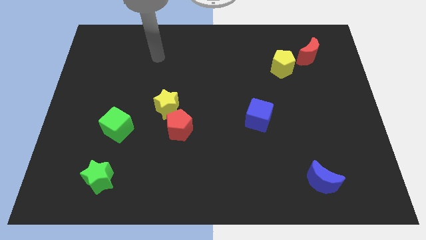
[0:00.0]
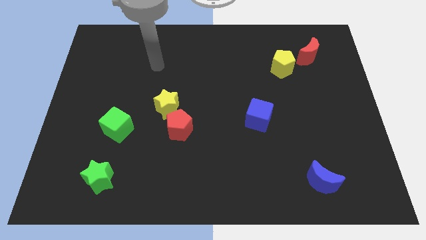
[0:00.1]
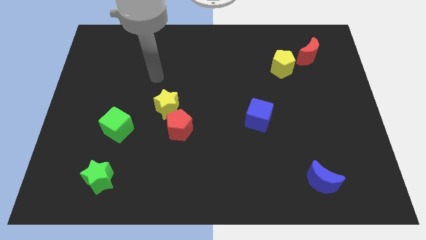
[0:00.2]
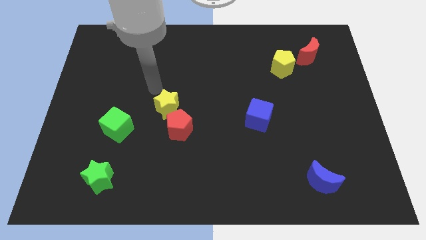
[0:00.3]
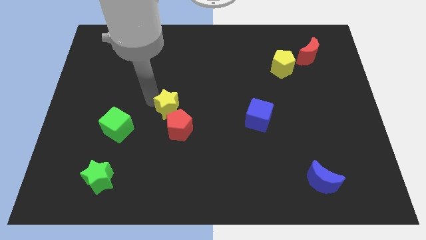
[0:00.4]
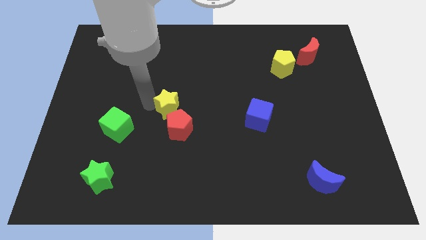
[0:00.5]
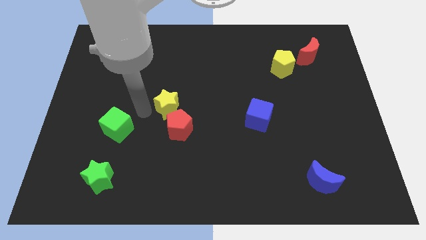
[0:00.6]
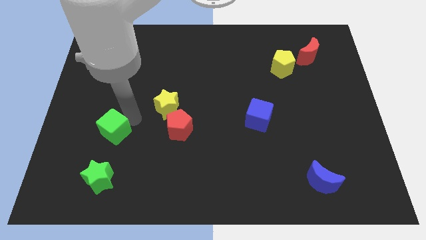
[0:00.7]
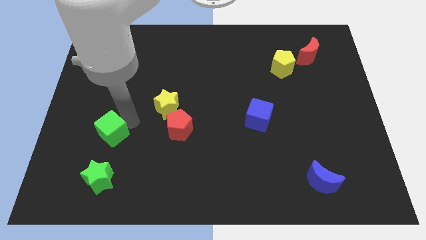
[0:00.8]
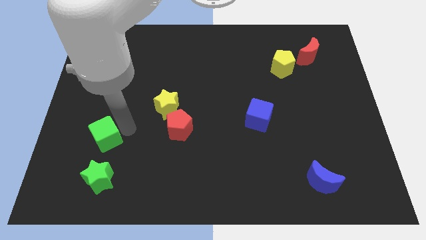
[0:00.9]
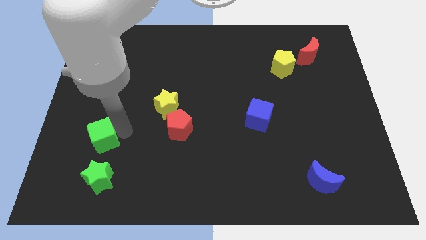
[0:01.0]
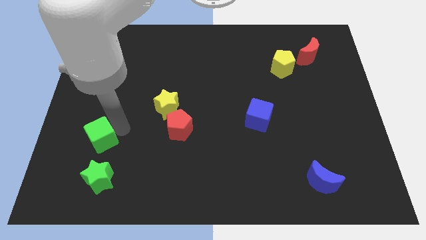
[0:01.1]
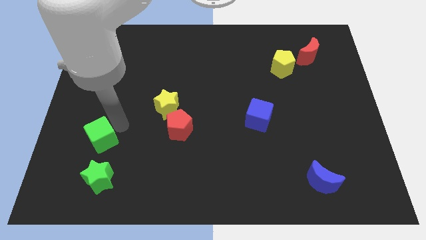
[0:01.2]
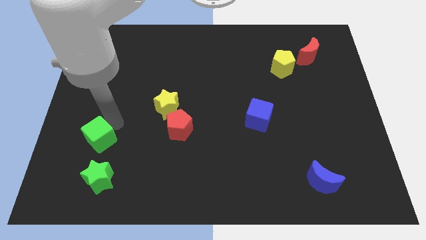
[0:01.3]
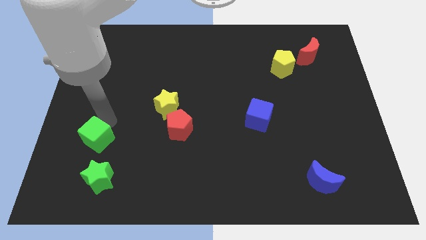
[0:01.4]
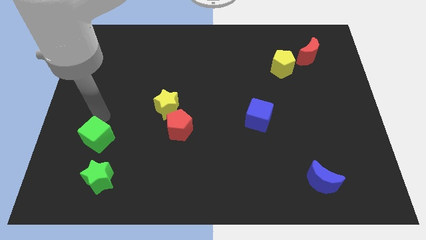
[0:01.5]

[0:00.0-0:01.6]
put the green cube above the green star

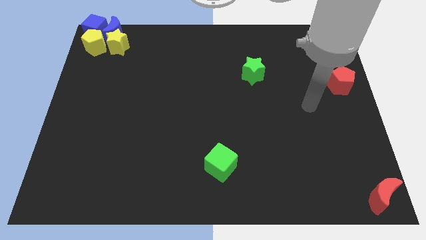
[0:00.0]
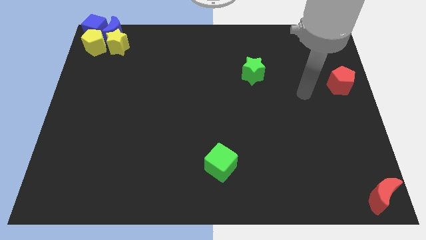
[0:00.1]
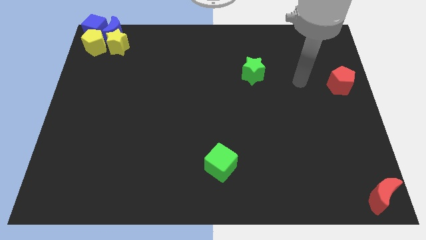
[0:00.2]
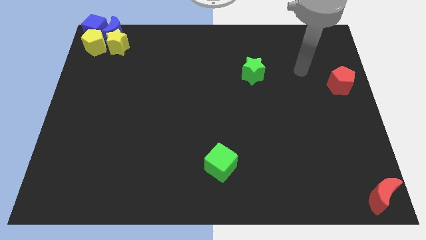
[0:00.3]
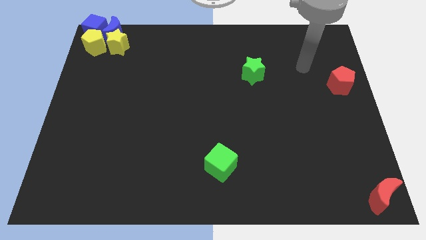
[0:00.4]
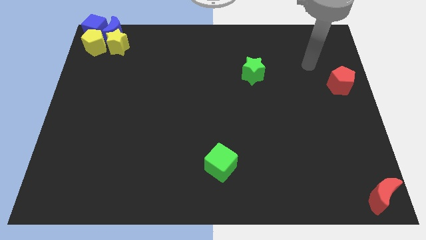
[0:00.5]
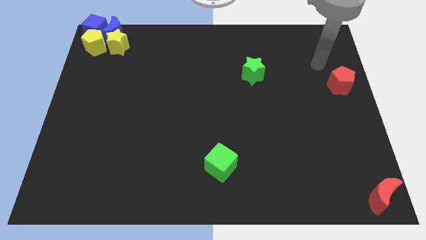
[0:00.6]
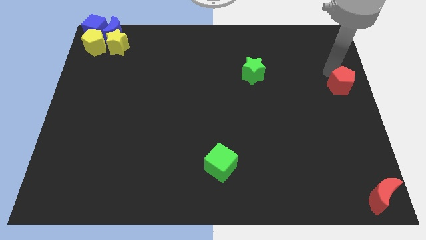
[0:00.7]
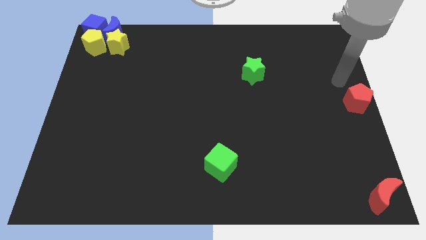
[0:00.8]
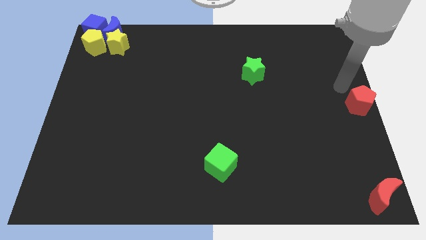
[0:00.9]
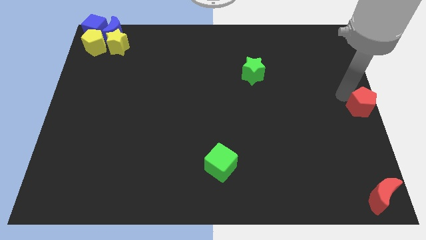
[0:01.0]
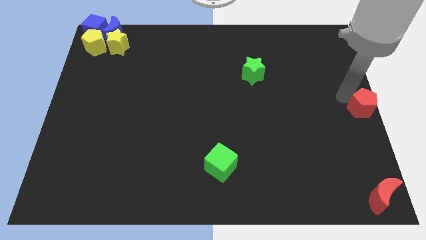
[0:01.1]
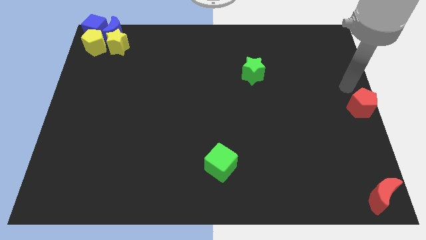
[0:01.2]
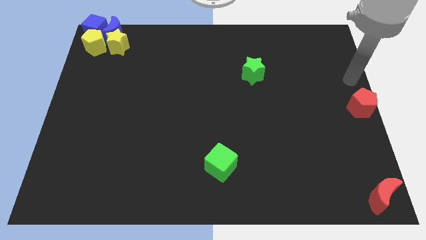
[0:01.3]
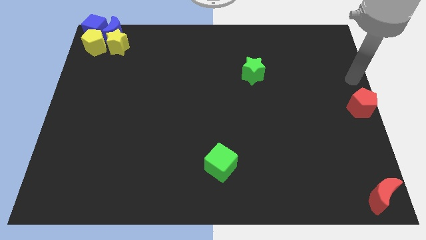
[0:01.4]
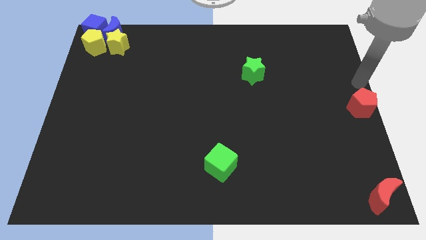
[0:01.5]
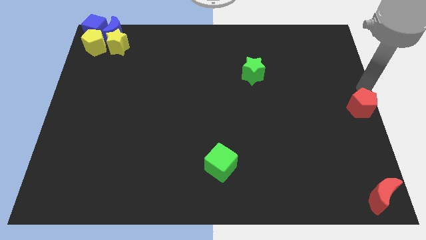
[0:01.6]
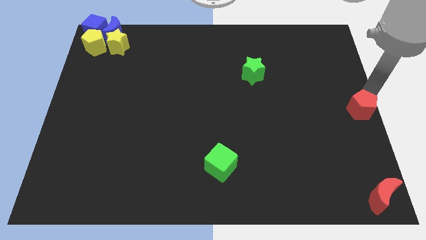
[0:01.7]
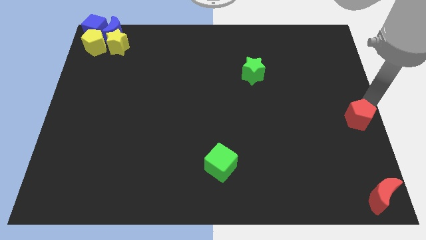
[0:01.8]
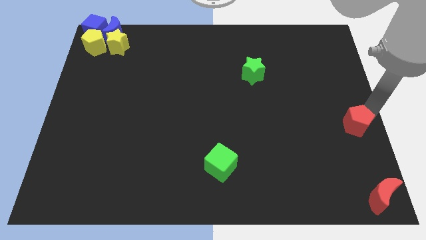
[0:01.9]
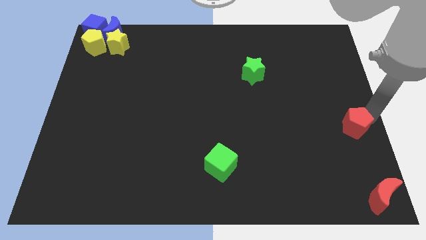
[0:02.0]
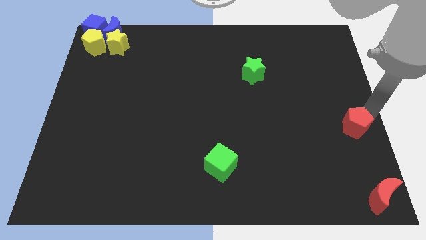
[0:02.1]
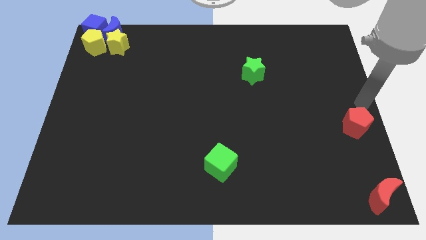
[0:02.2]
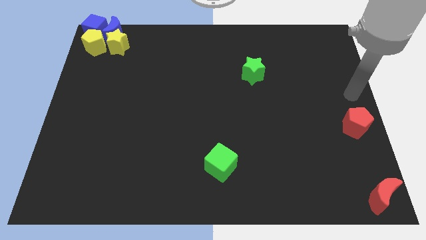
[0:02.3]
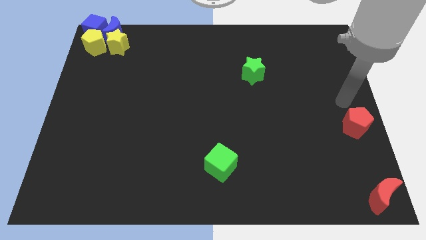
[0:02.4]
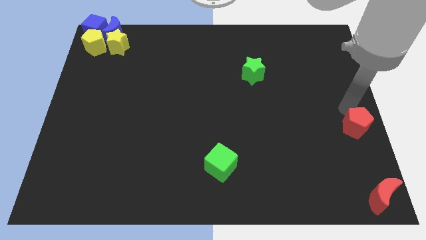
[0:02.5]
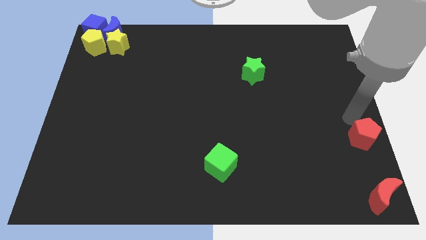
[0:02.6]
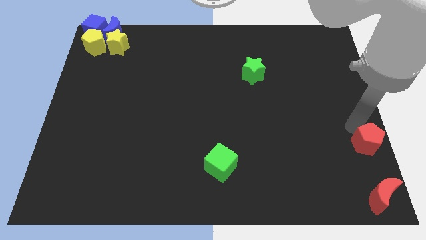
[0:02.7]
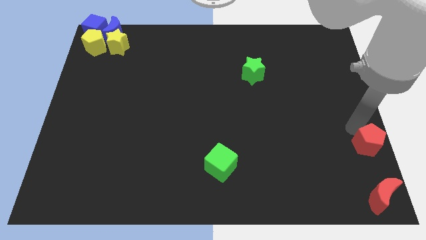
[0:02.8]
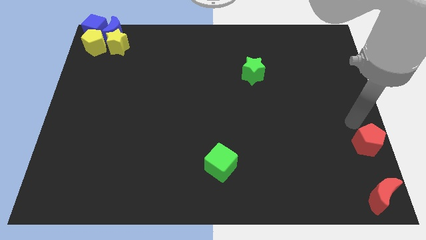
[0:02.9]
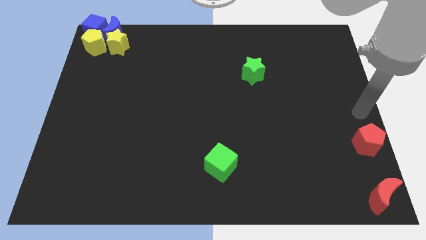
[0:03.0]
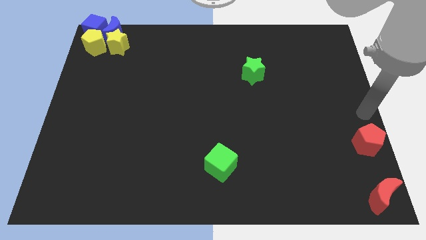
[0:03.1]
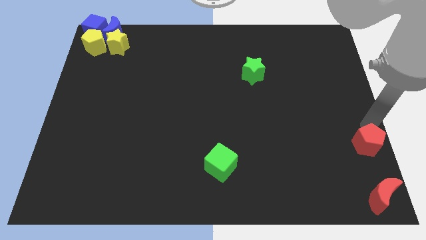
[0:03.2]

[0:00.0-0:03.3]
put the red pentagon on top of the red moon

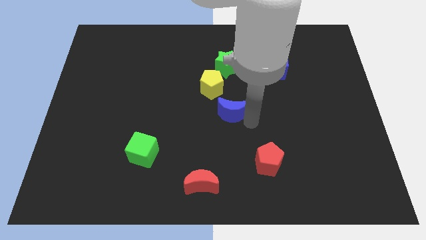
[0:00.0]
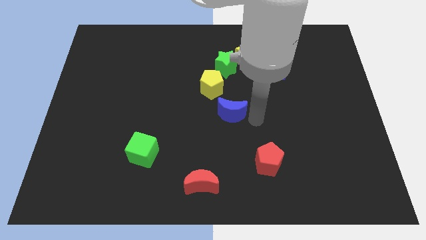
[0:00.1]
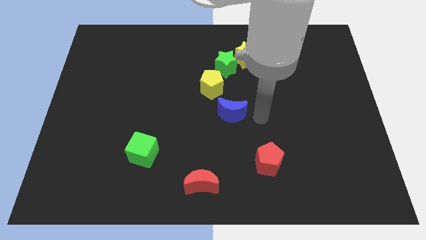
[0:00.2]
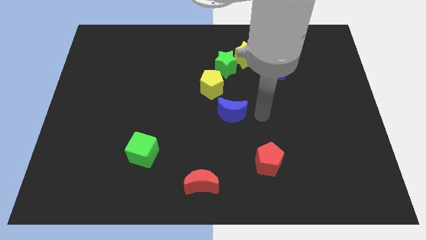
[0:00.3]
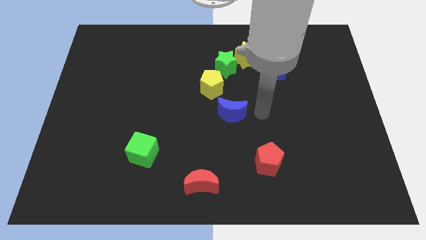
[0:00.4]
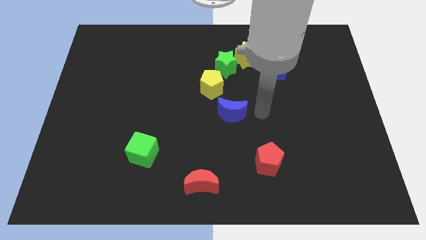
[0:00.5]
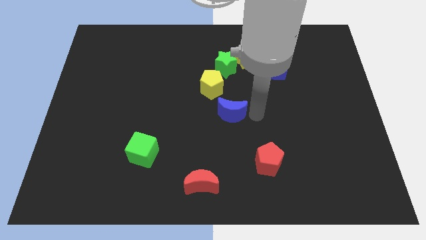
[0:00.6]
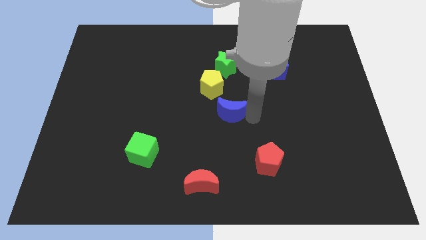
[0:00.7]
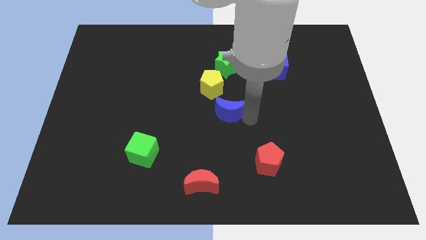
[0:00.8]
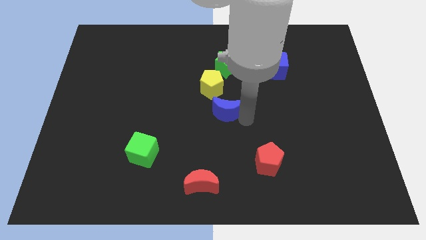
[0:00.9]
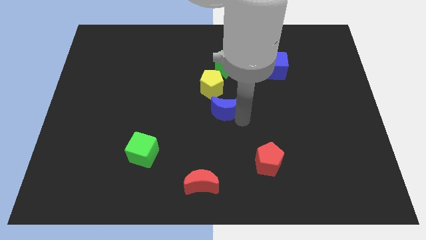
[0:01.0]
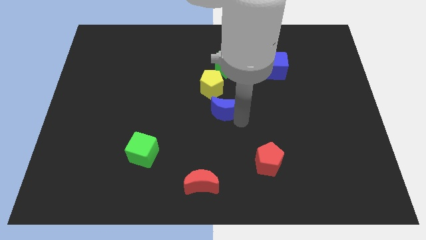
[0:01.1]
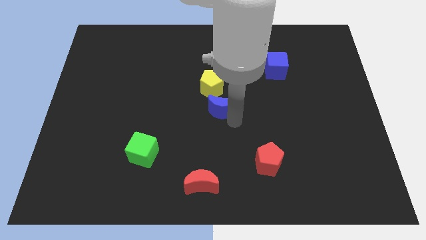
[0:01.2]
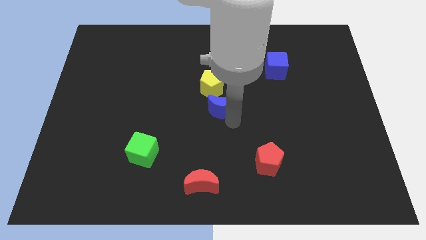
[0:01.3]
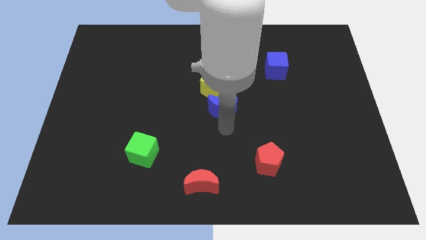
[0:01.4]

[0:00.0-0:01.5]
place the blue moon below the yellow pentagon

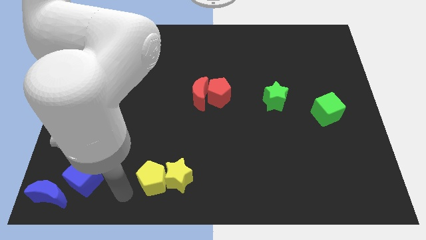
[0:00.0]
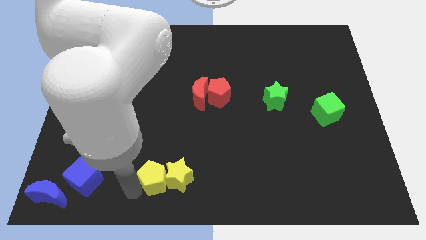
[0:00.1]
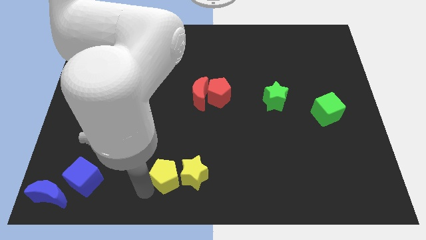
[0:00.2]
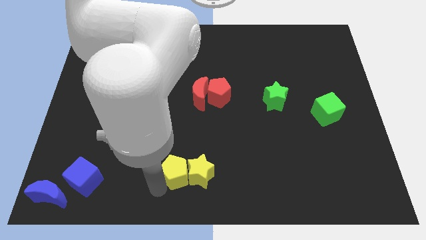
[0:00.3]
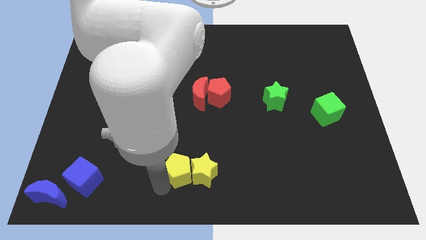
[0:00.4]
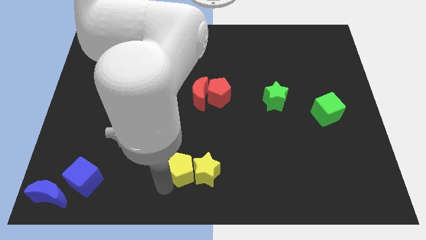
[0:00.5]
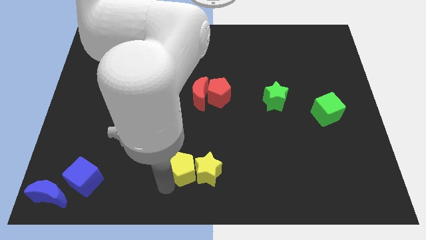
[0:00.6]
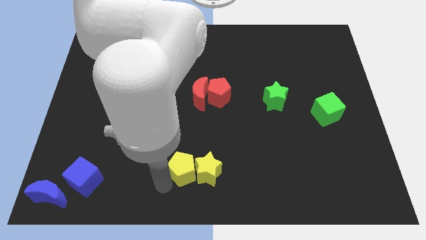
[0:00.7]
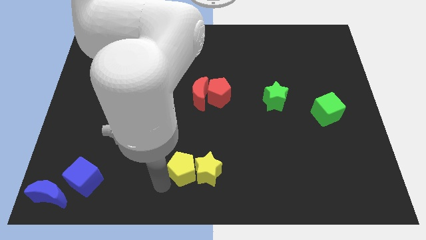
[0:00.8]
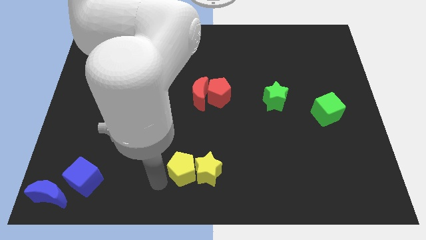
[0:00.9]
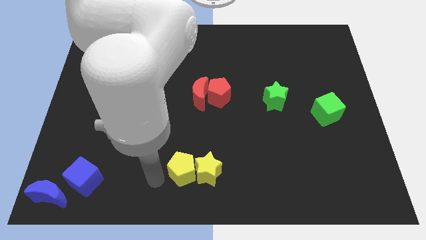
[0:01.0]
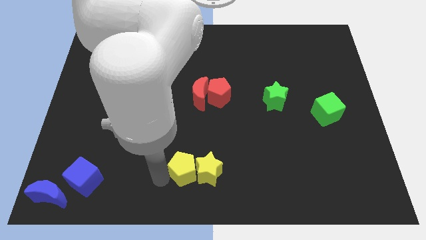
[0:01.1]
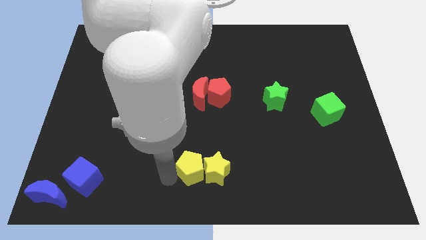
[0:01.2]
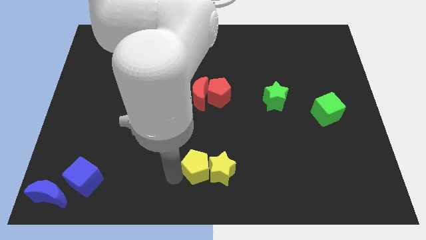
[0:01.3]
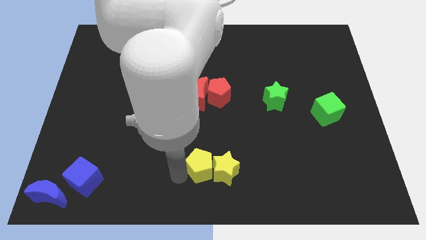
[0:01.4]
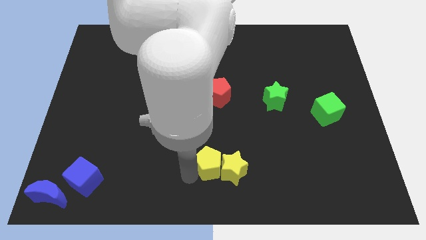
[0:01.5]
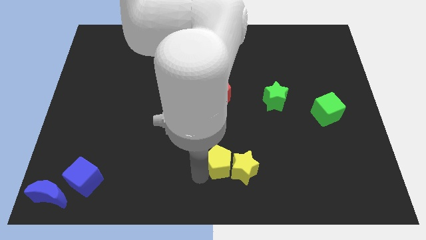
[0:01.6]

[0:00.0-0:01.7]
slide the yellow blocks to the right side

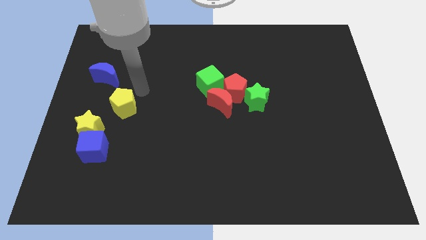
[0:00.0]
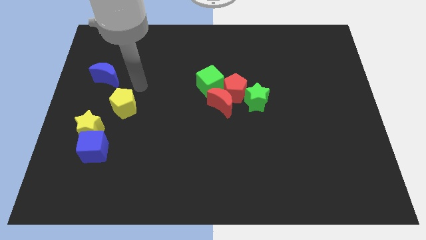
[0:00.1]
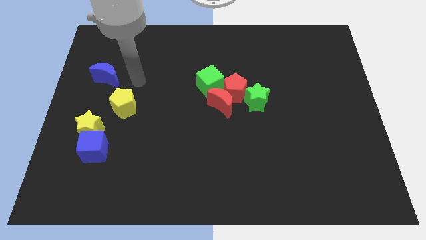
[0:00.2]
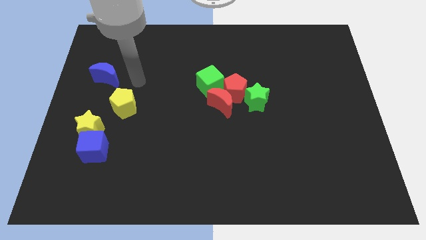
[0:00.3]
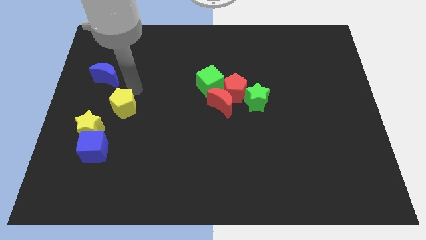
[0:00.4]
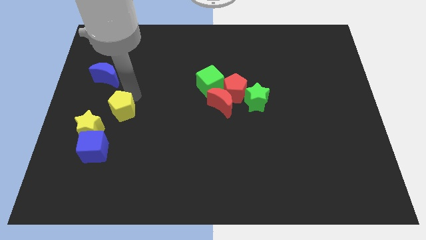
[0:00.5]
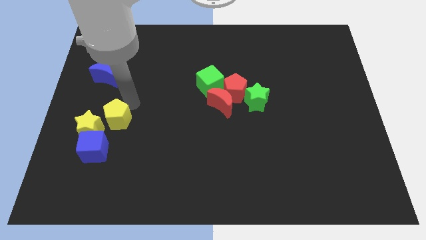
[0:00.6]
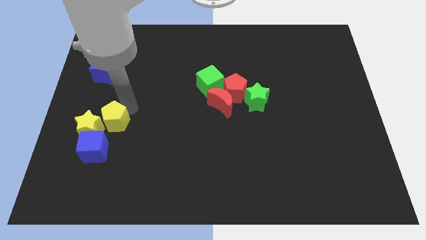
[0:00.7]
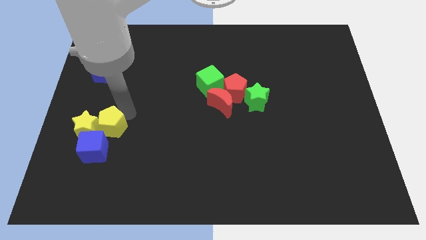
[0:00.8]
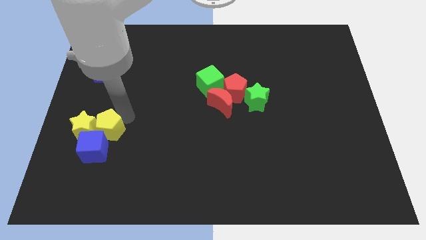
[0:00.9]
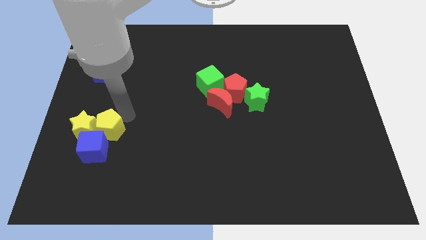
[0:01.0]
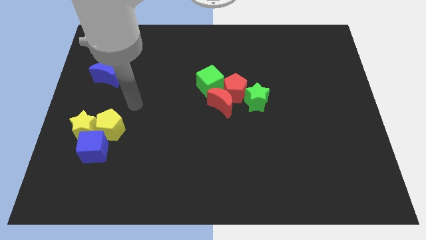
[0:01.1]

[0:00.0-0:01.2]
push the yellow pentagon into the blue cube
